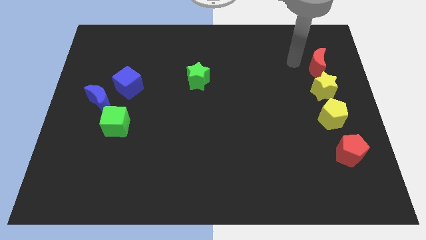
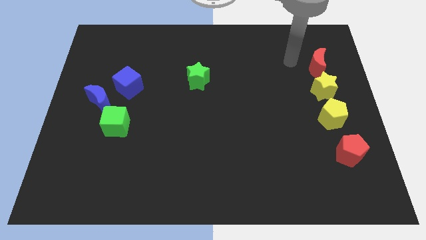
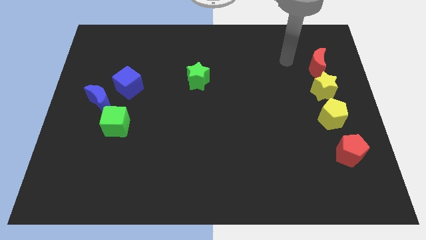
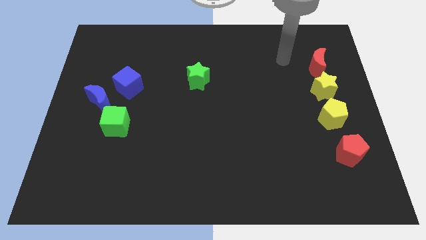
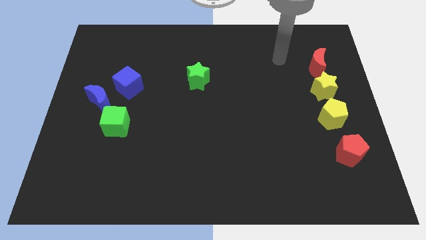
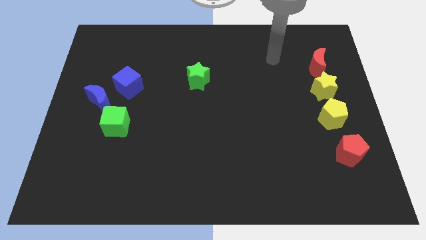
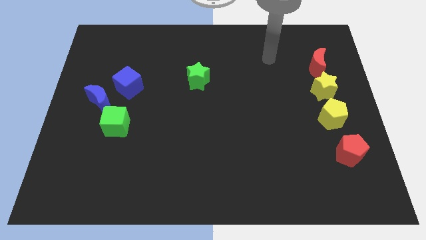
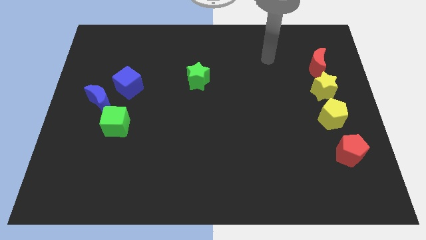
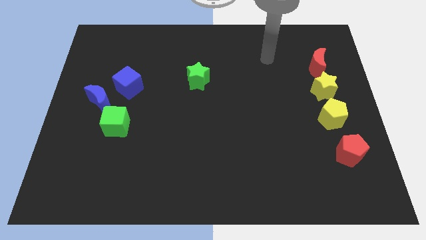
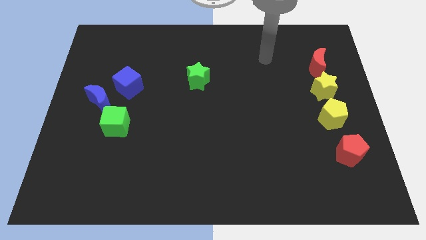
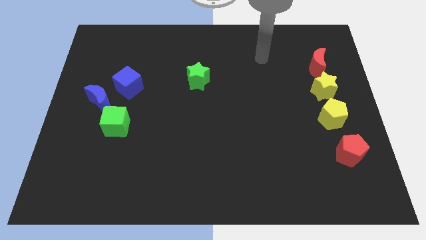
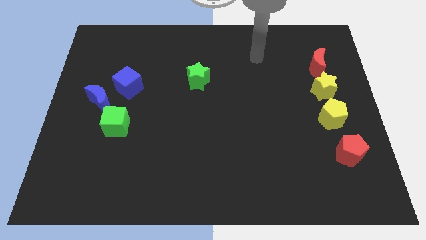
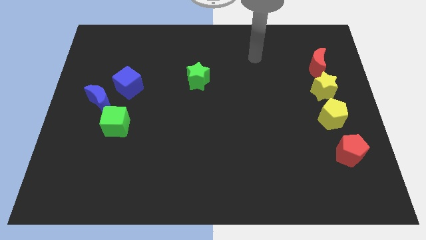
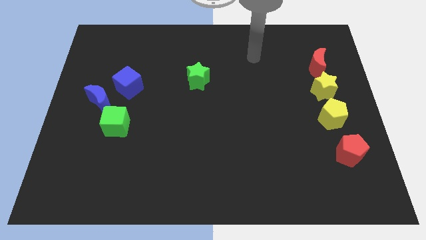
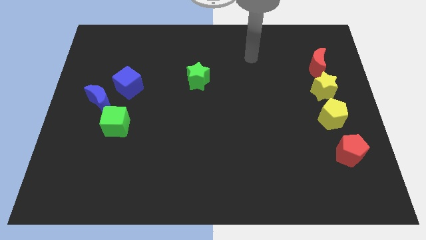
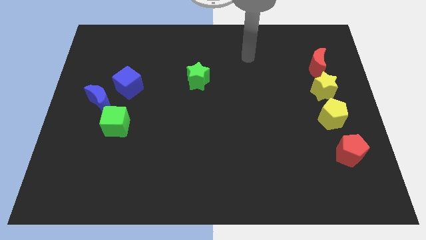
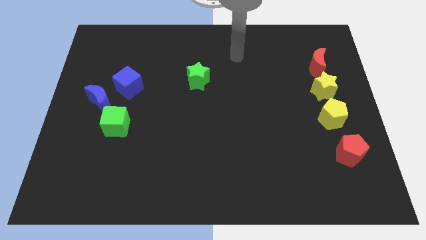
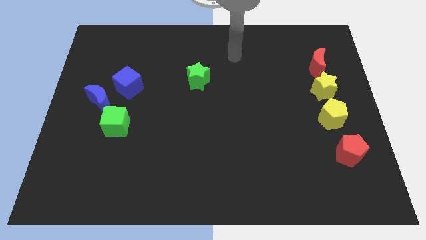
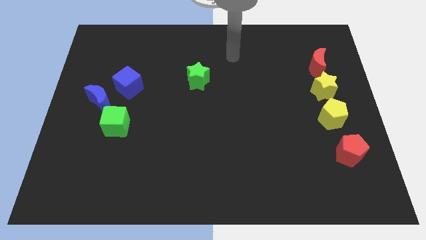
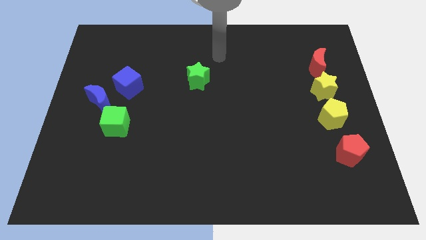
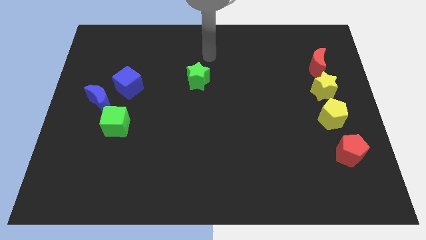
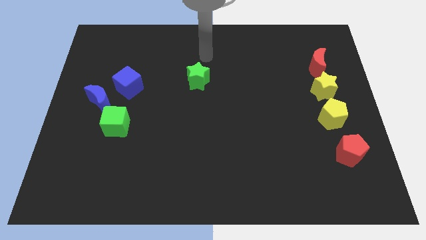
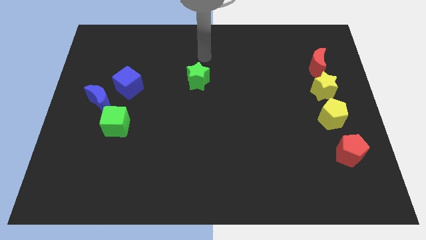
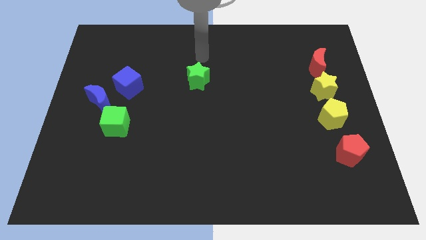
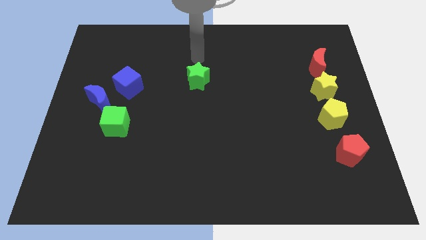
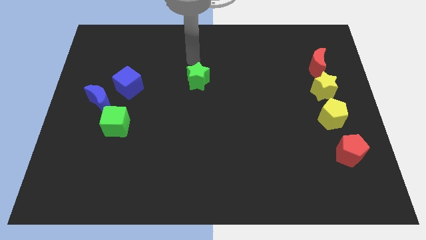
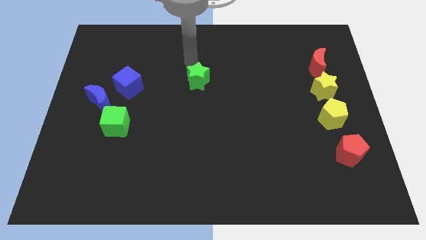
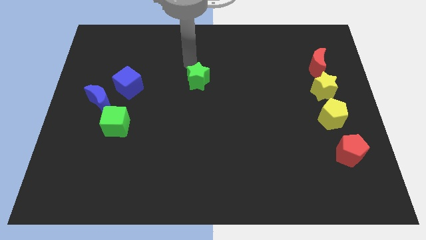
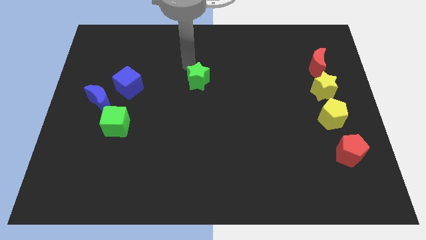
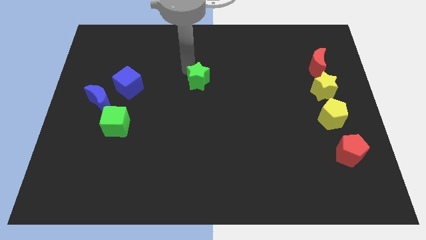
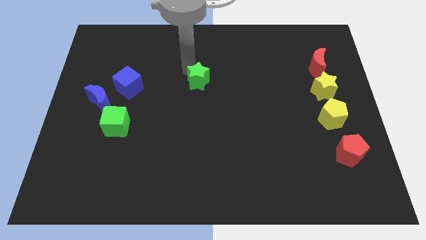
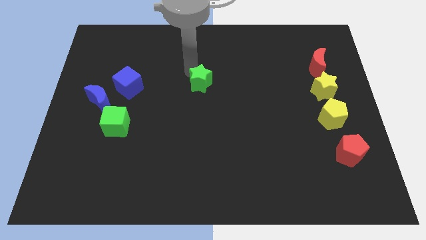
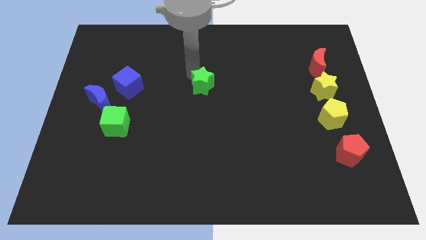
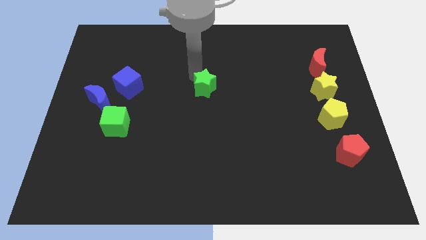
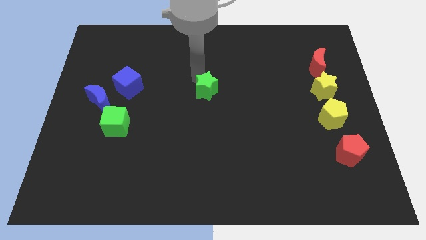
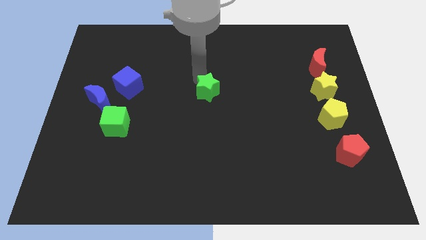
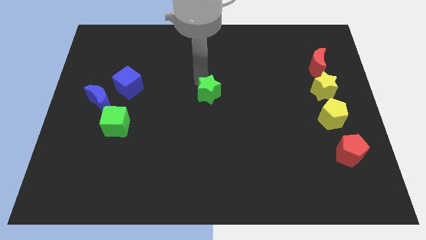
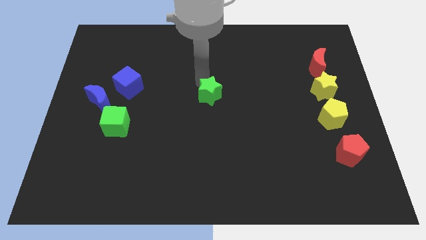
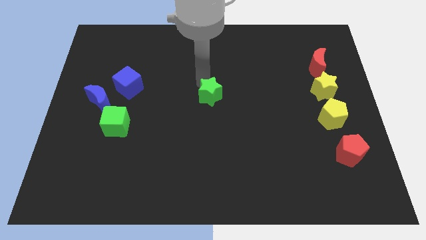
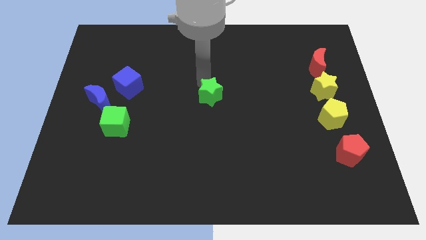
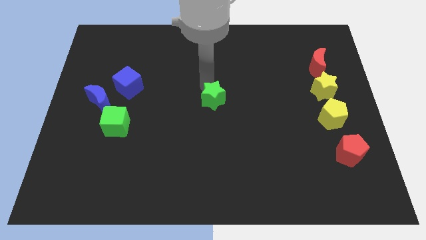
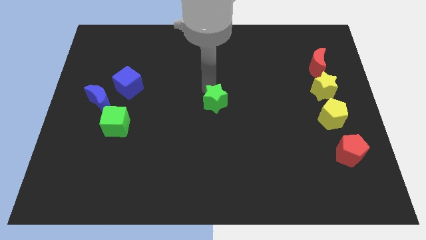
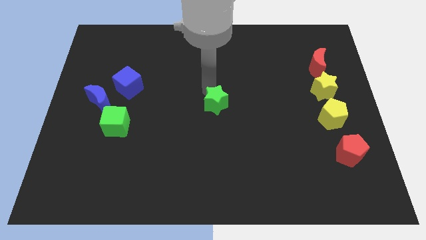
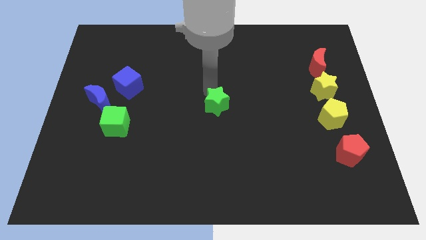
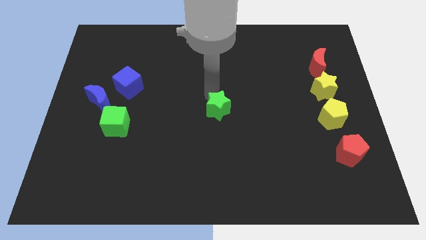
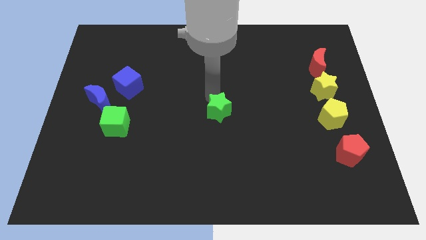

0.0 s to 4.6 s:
push the green star to the center of the board

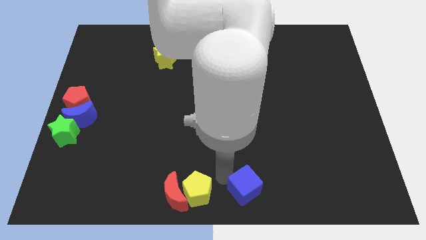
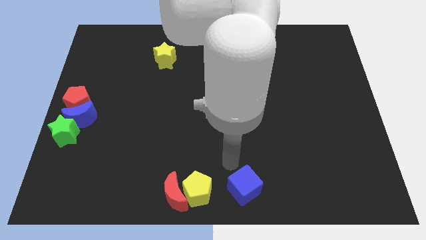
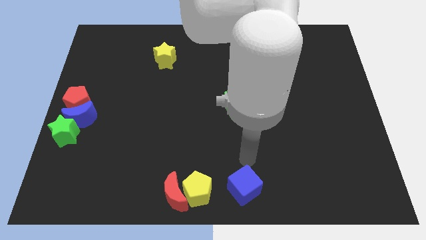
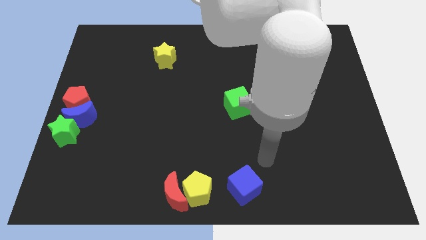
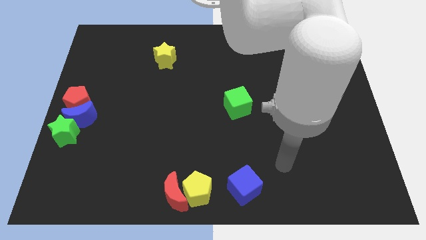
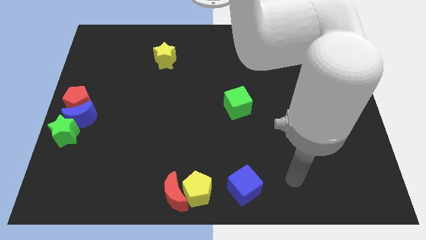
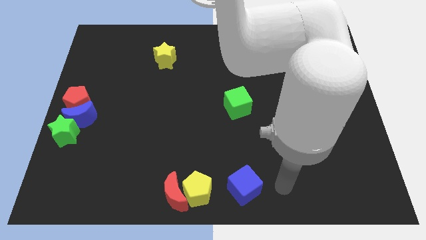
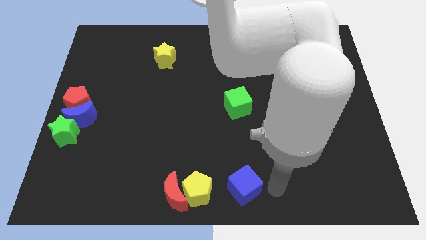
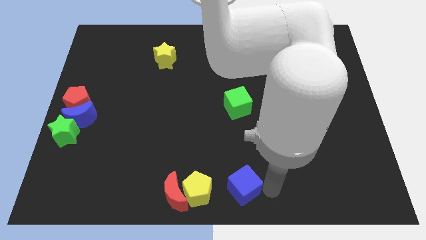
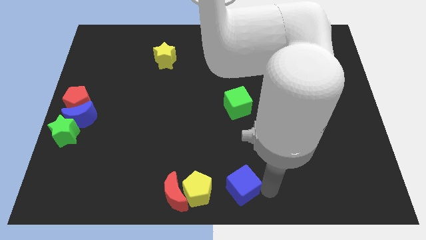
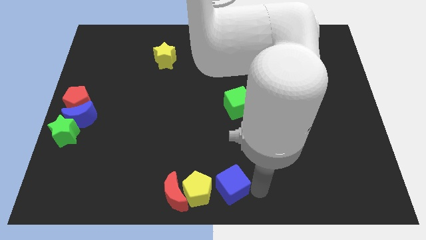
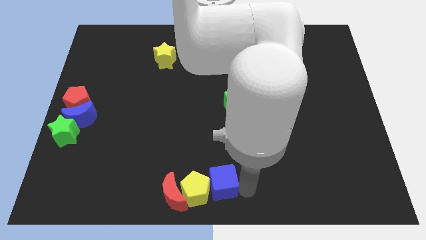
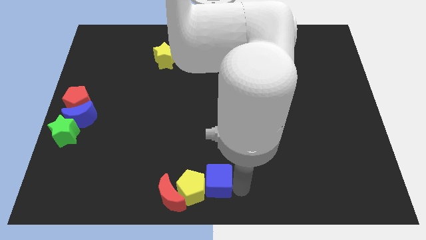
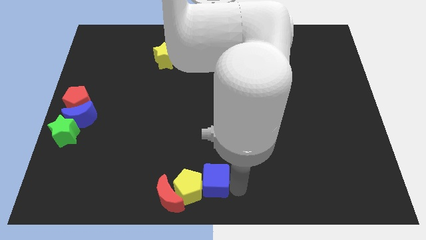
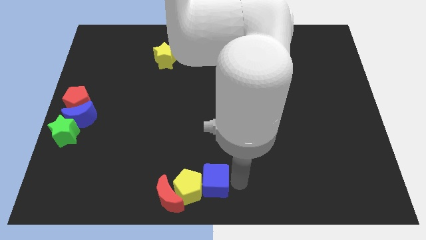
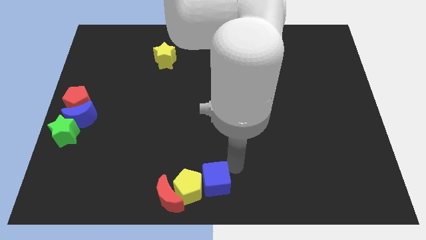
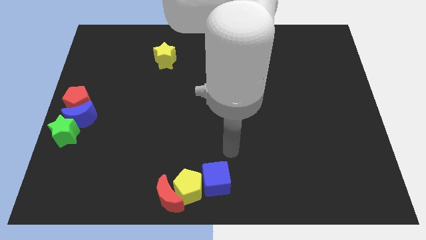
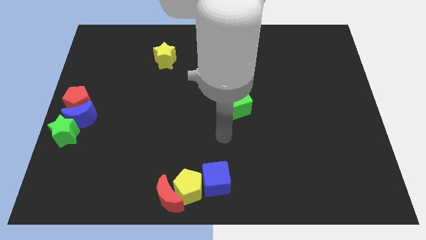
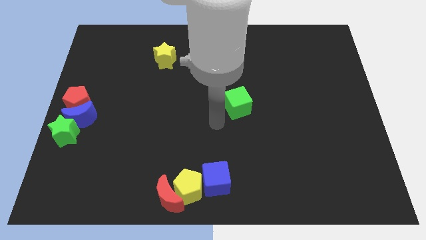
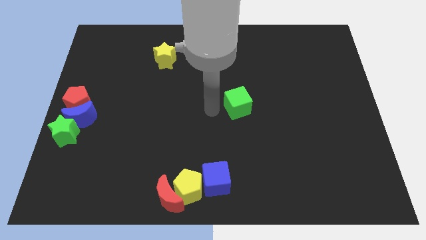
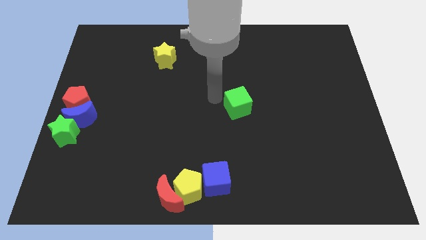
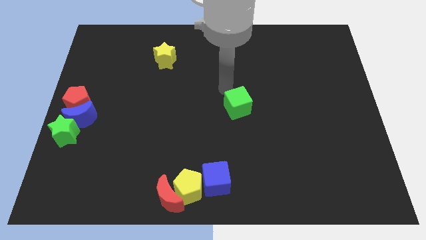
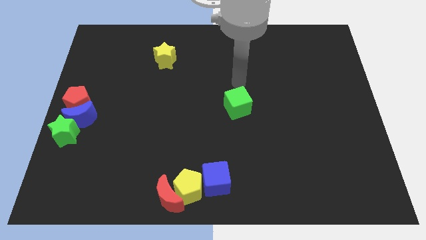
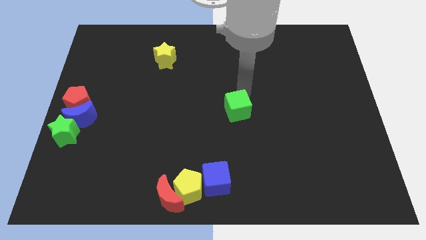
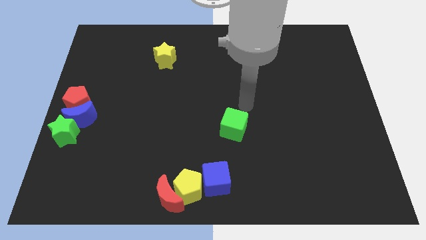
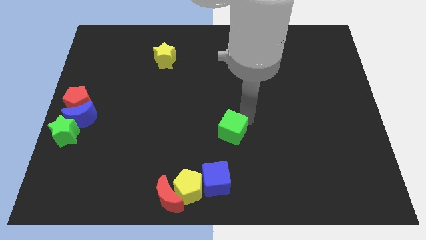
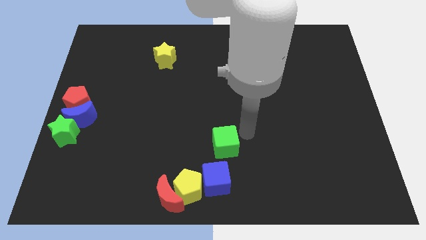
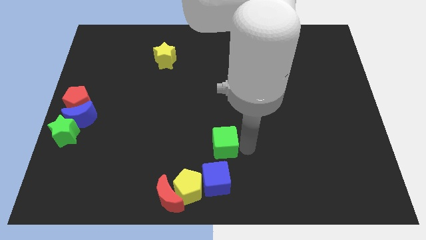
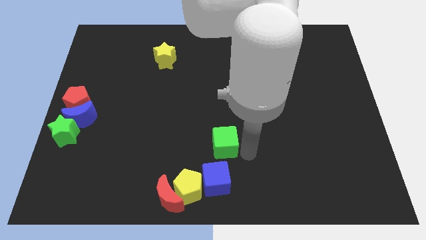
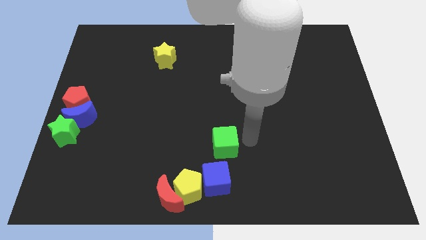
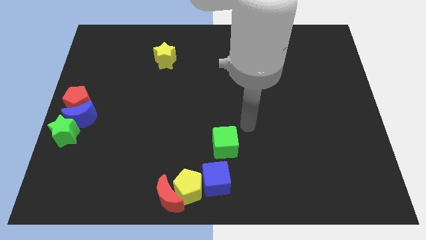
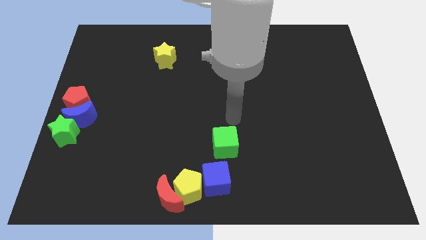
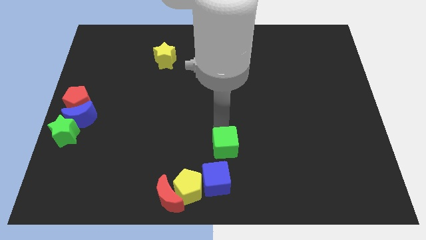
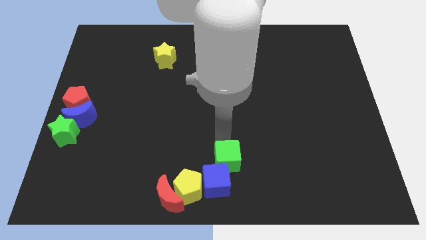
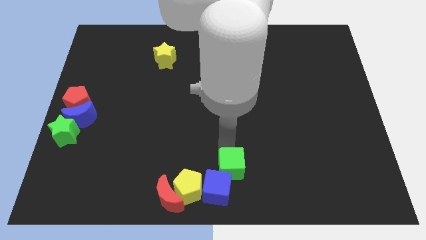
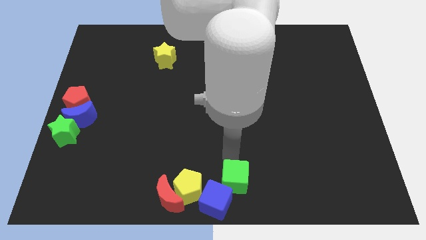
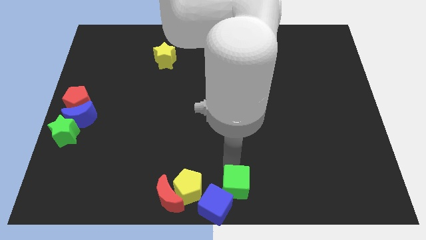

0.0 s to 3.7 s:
place green cube towards blue cube

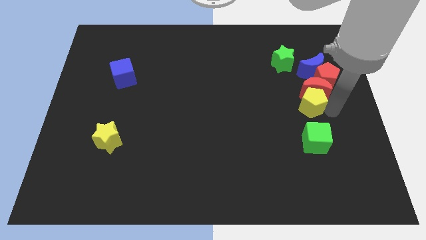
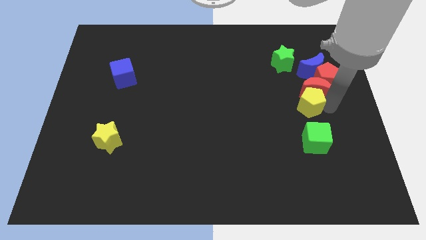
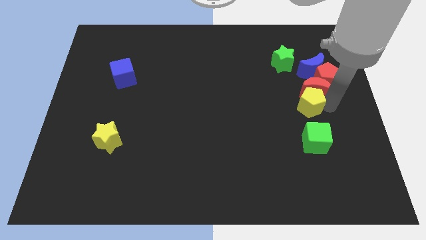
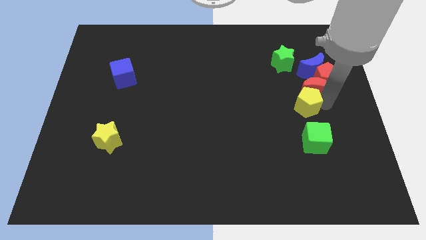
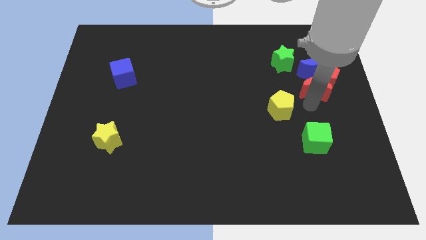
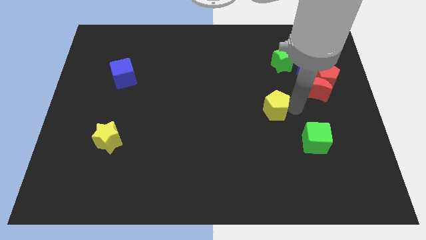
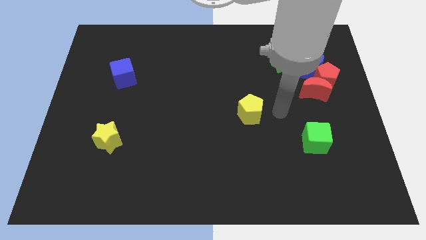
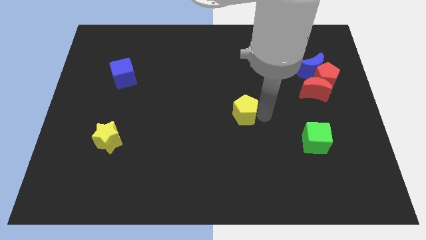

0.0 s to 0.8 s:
separate the yellow pentagon from the red moon
